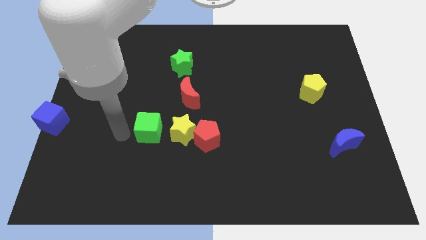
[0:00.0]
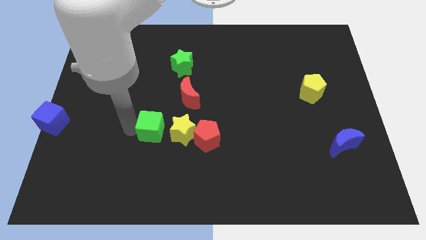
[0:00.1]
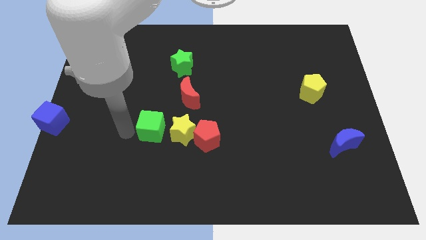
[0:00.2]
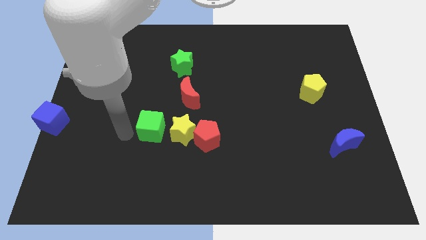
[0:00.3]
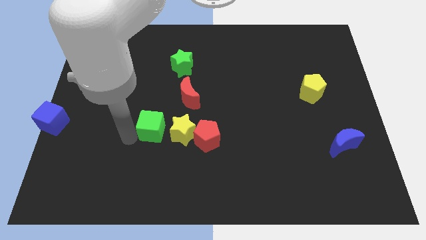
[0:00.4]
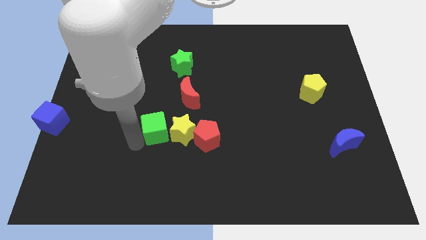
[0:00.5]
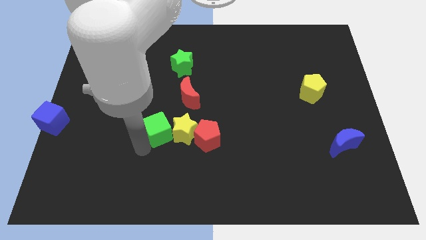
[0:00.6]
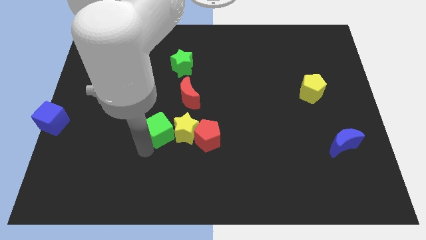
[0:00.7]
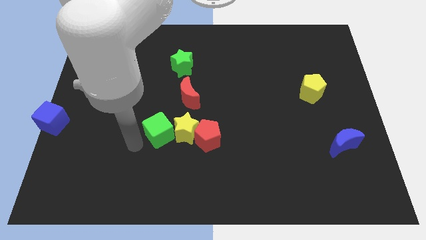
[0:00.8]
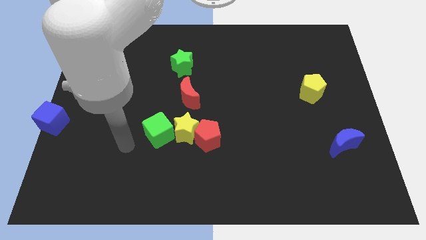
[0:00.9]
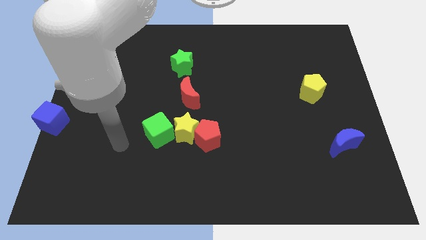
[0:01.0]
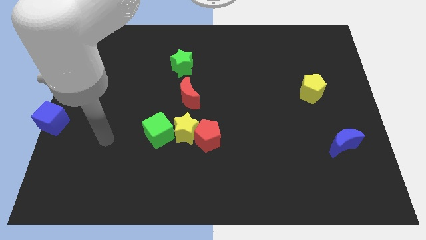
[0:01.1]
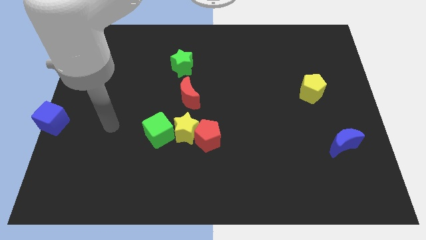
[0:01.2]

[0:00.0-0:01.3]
push green cube in to yellow star

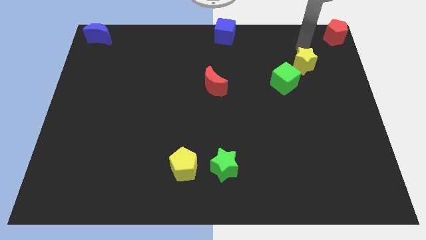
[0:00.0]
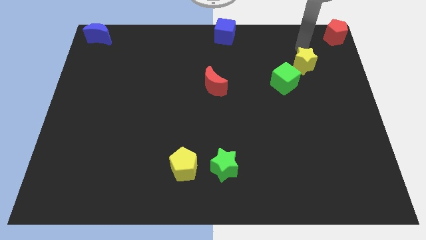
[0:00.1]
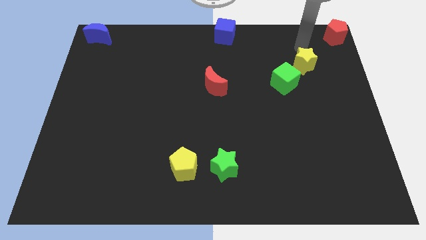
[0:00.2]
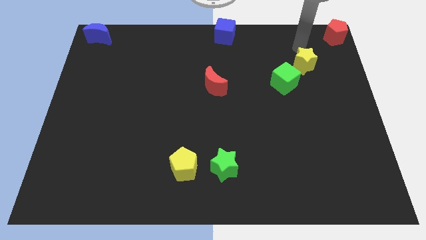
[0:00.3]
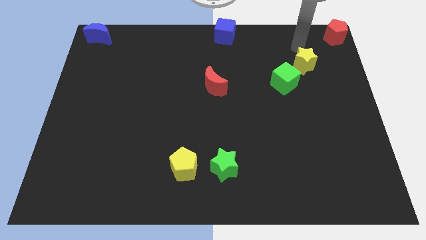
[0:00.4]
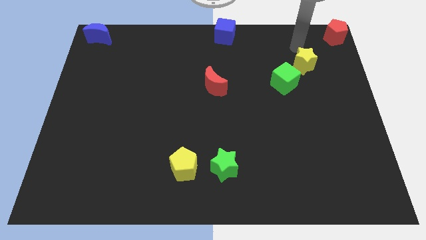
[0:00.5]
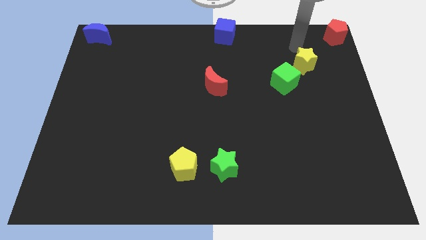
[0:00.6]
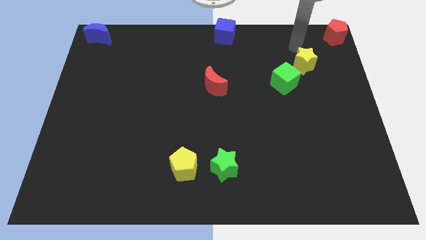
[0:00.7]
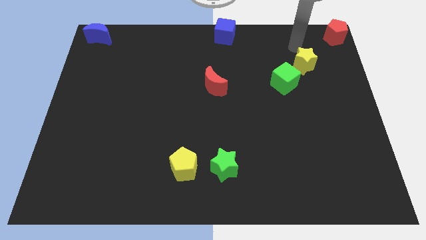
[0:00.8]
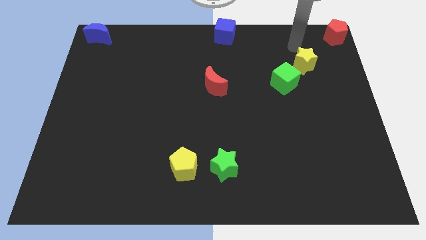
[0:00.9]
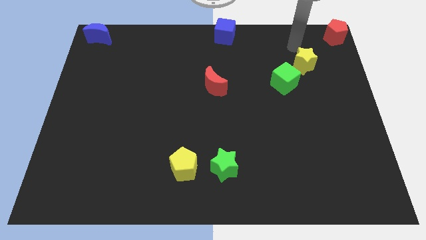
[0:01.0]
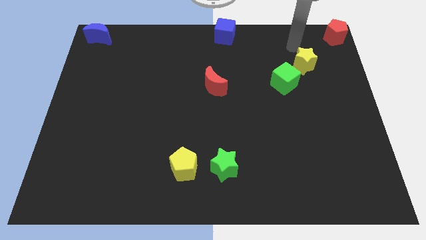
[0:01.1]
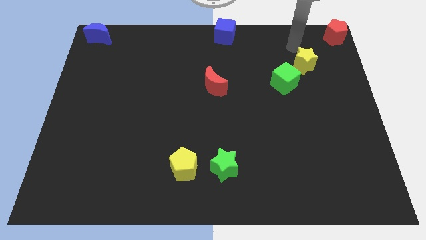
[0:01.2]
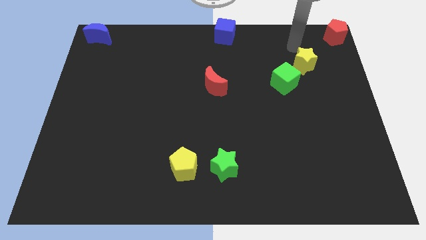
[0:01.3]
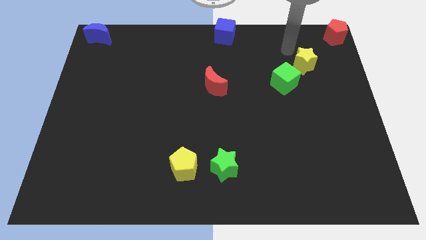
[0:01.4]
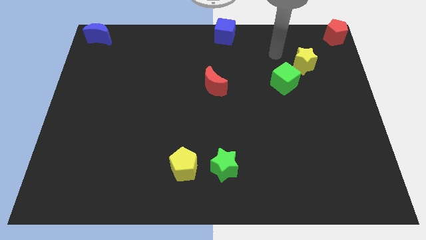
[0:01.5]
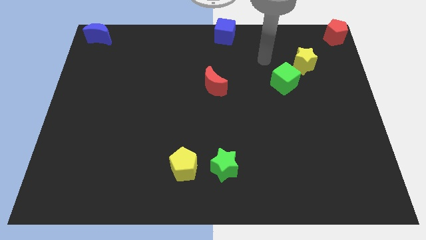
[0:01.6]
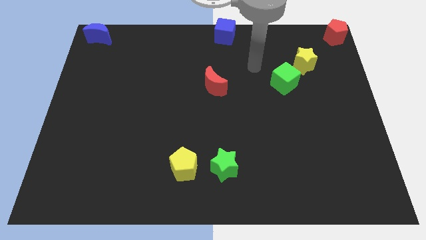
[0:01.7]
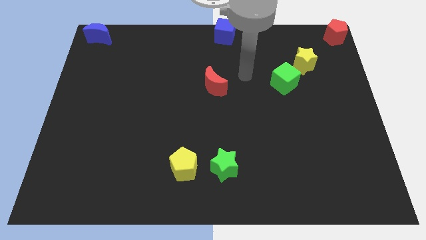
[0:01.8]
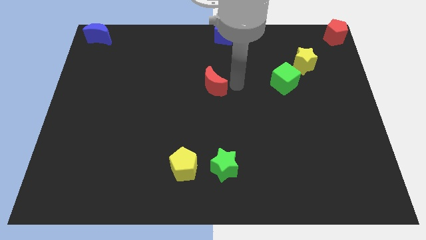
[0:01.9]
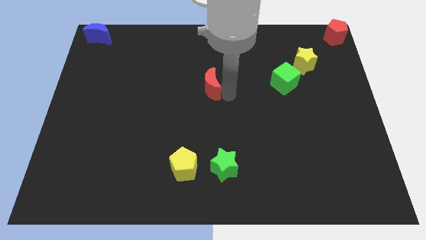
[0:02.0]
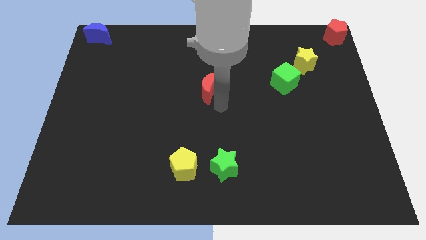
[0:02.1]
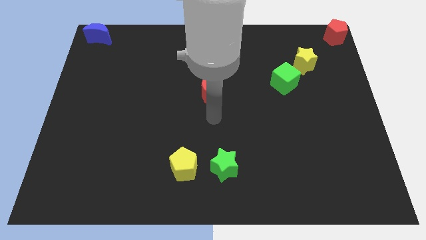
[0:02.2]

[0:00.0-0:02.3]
slide the red moon to the center of the board

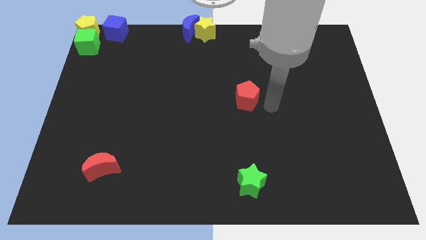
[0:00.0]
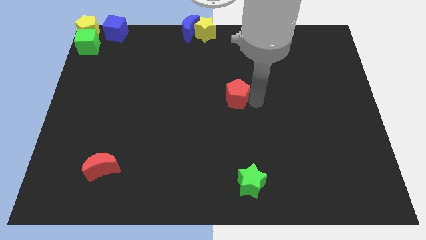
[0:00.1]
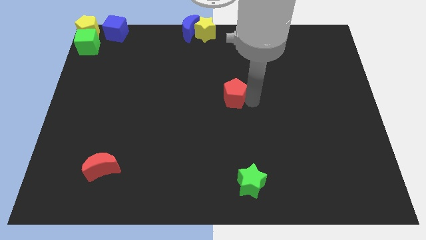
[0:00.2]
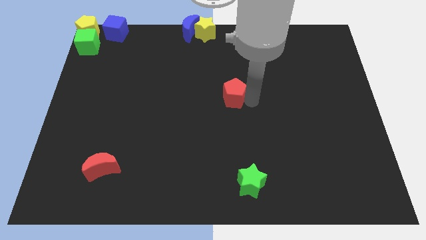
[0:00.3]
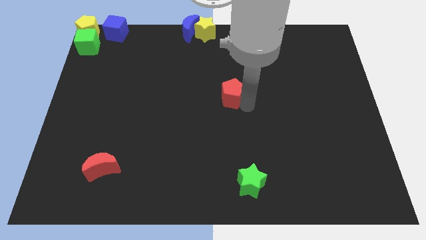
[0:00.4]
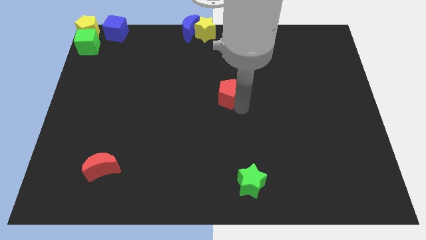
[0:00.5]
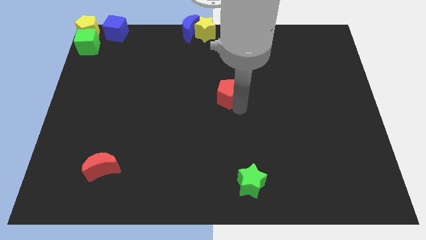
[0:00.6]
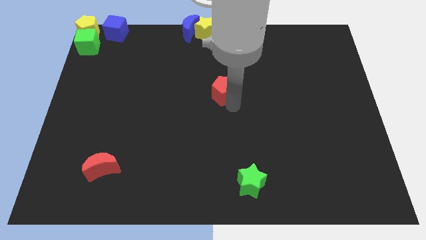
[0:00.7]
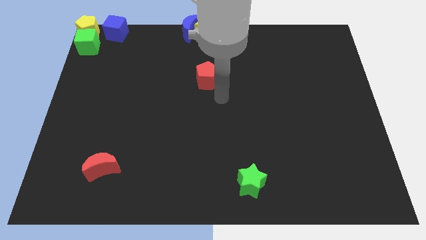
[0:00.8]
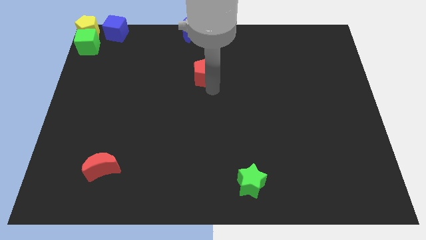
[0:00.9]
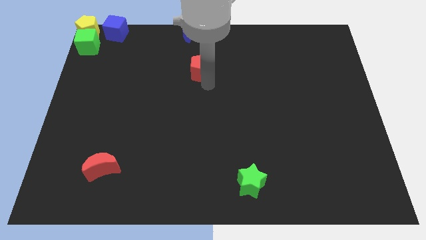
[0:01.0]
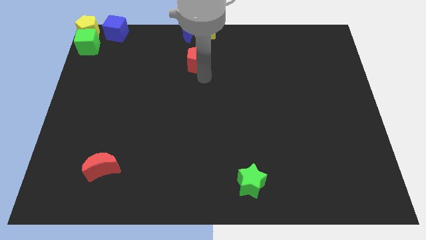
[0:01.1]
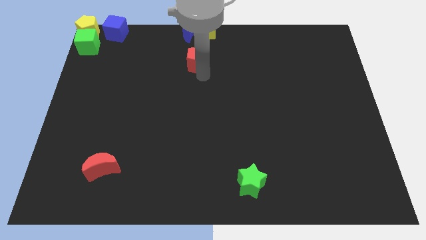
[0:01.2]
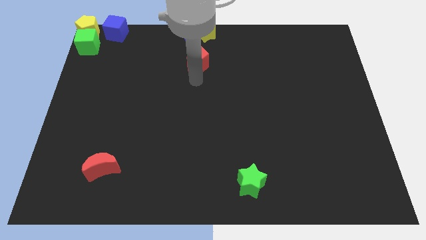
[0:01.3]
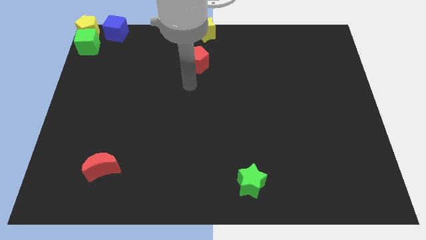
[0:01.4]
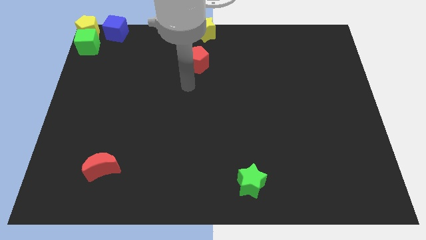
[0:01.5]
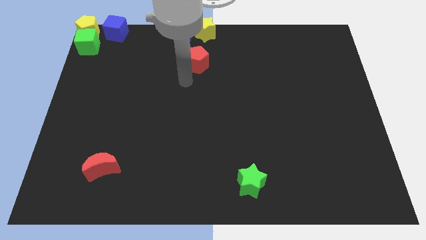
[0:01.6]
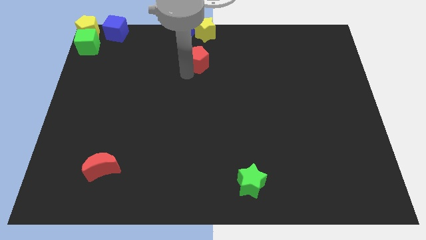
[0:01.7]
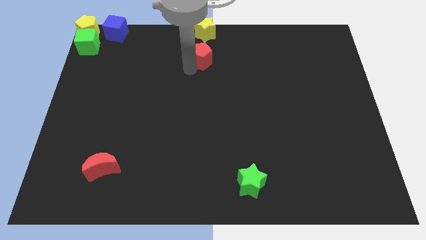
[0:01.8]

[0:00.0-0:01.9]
place the red pentagon below the yellow star

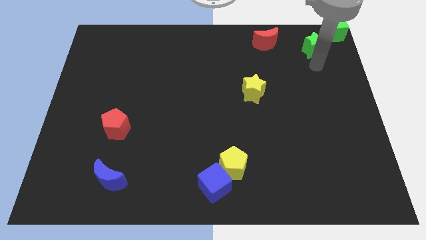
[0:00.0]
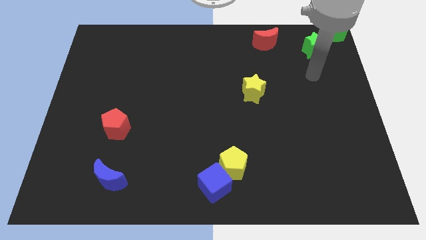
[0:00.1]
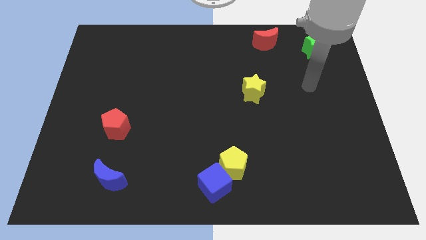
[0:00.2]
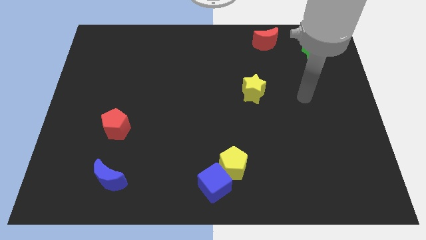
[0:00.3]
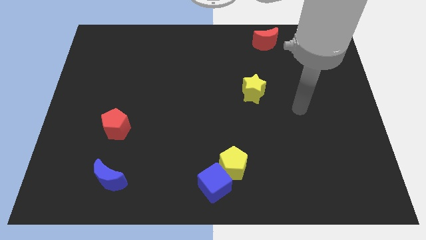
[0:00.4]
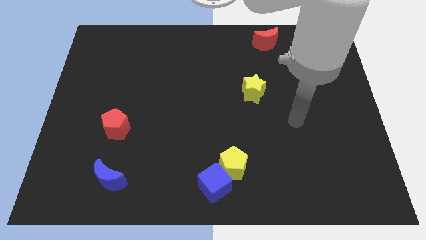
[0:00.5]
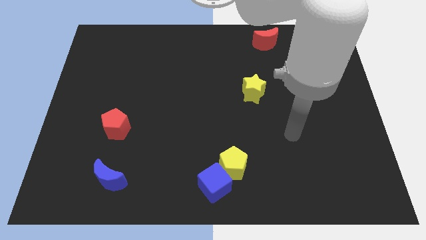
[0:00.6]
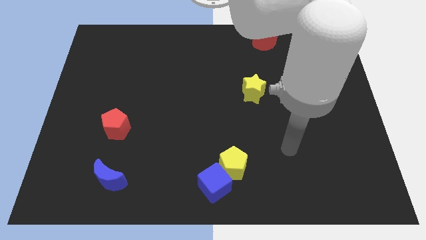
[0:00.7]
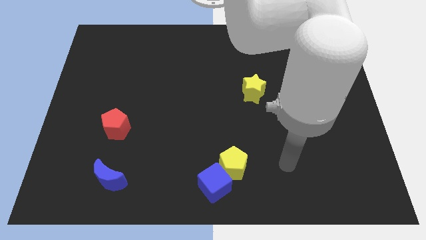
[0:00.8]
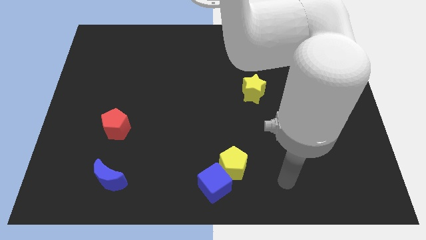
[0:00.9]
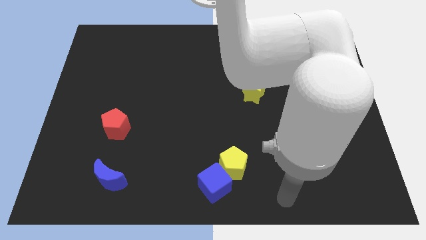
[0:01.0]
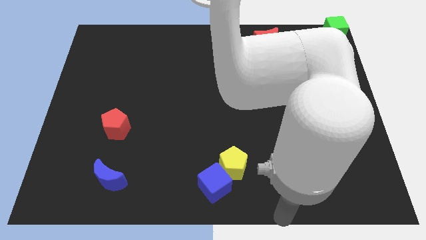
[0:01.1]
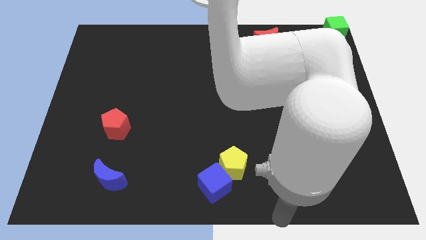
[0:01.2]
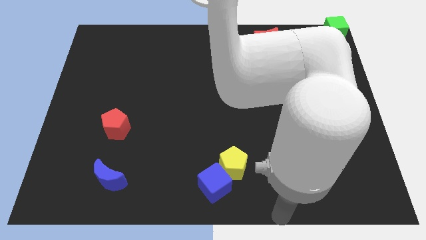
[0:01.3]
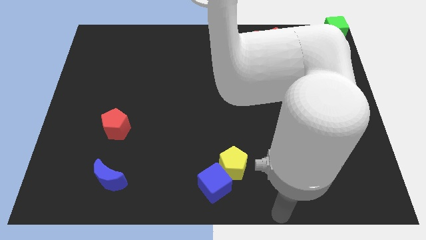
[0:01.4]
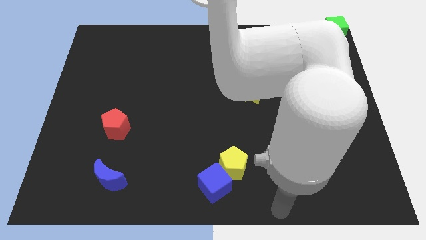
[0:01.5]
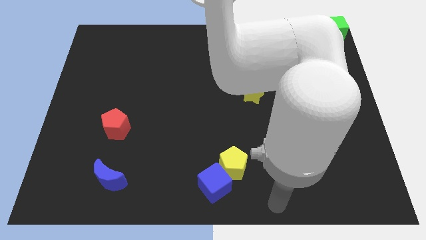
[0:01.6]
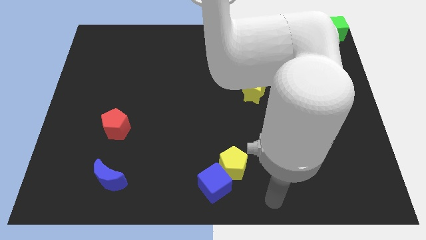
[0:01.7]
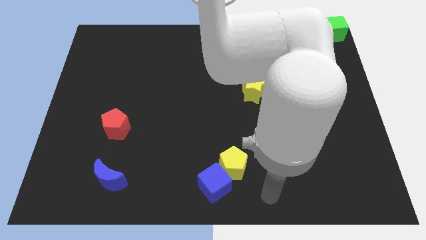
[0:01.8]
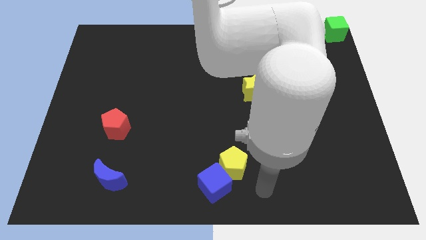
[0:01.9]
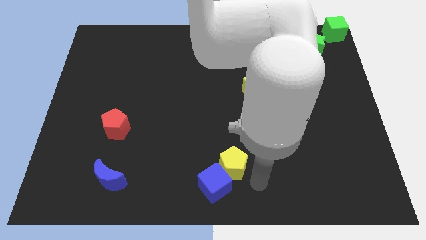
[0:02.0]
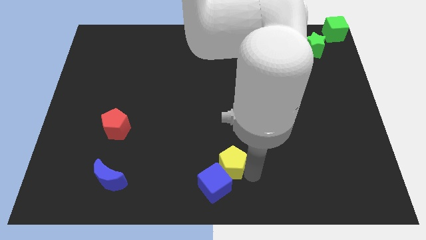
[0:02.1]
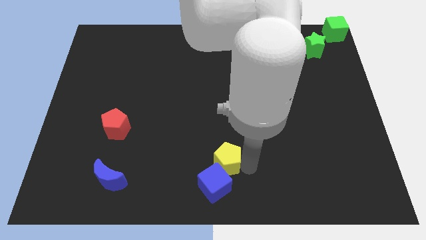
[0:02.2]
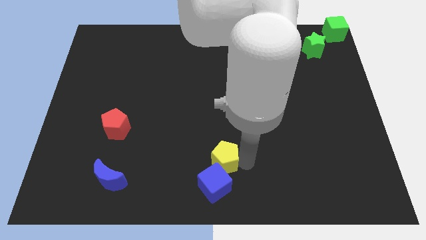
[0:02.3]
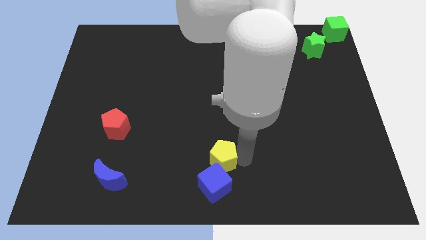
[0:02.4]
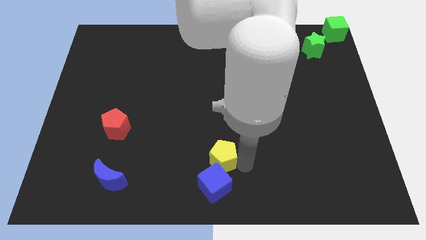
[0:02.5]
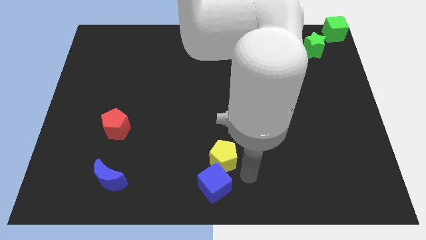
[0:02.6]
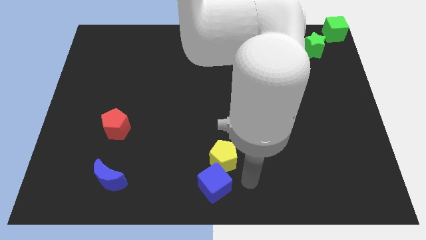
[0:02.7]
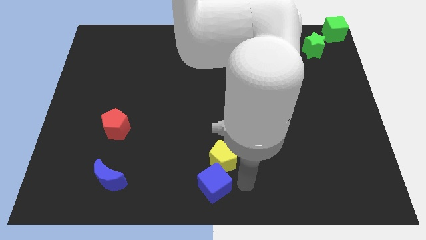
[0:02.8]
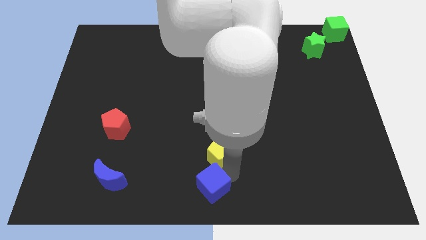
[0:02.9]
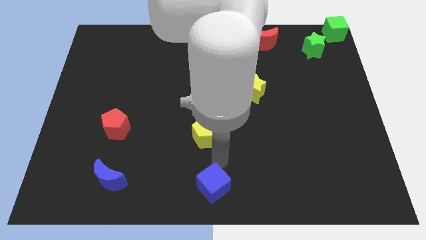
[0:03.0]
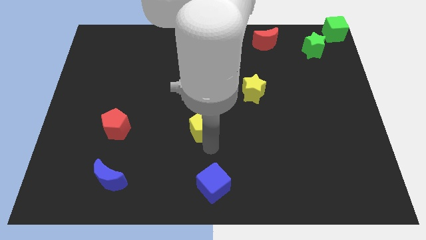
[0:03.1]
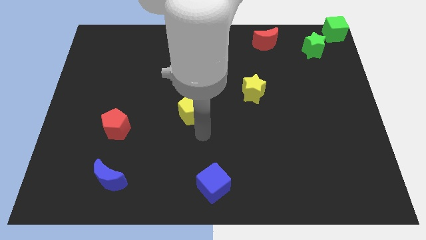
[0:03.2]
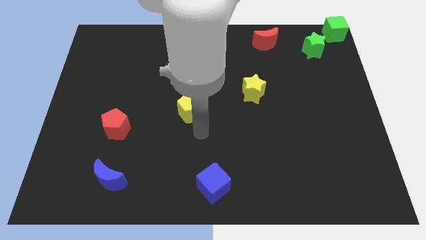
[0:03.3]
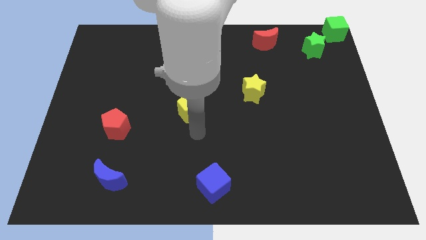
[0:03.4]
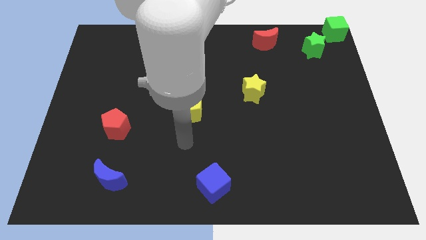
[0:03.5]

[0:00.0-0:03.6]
place the yellow pentagon left diagonally towards yellow star
